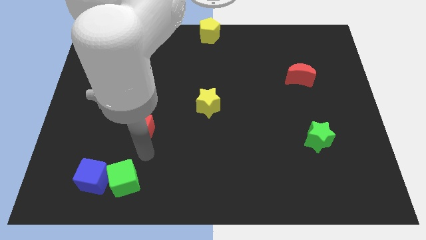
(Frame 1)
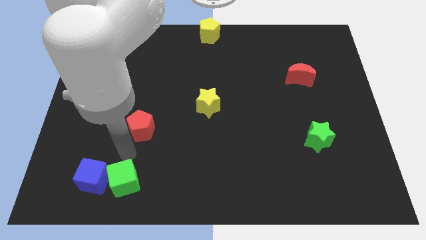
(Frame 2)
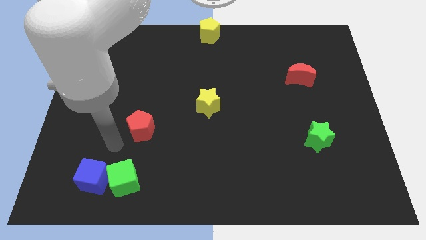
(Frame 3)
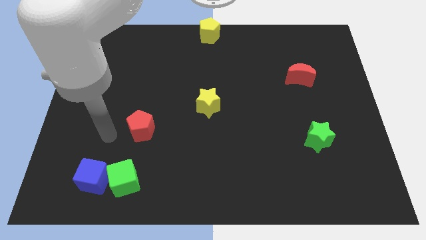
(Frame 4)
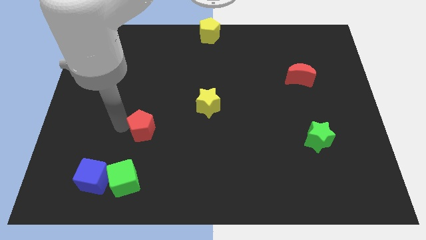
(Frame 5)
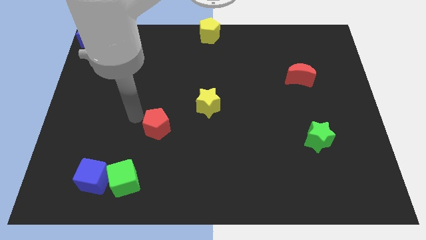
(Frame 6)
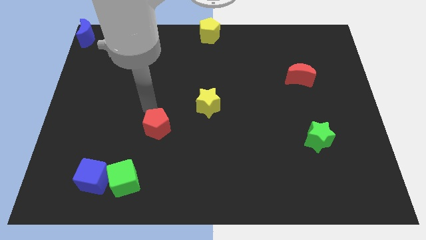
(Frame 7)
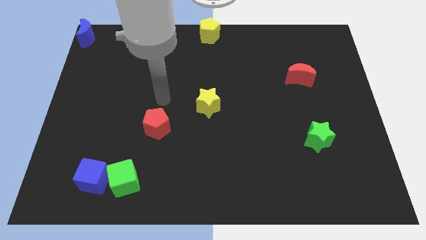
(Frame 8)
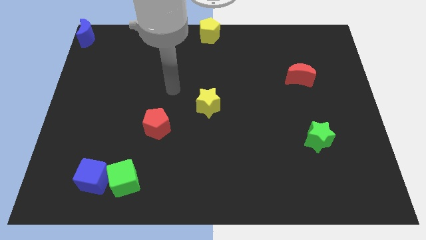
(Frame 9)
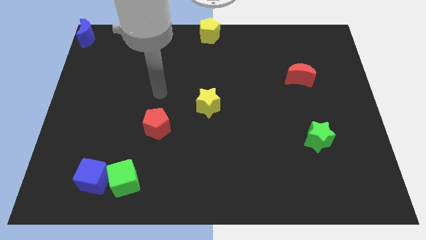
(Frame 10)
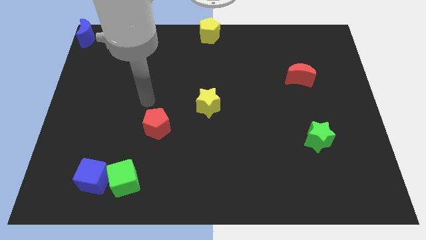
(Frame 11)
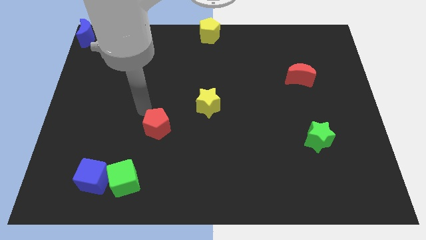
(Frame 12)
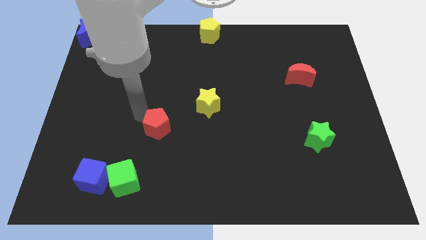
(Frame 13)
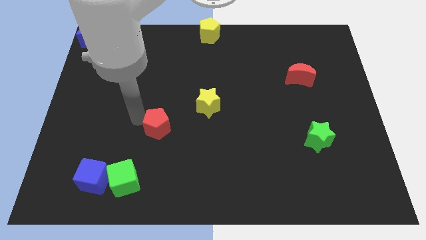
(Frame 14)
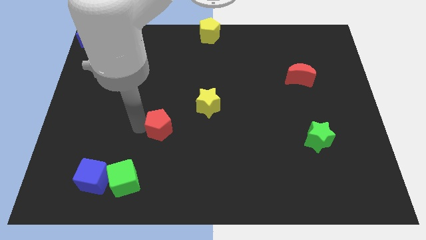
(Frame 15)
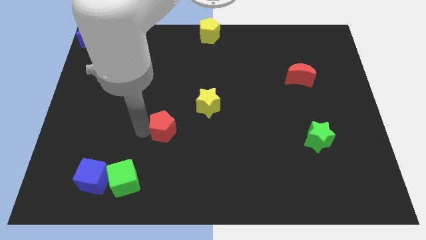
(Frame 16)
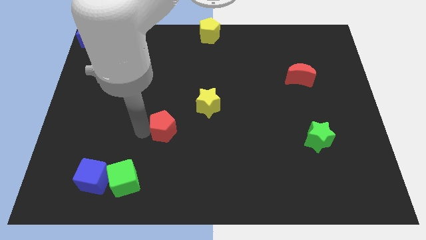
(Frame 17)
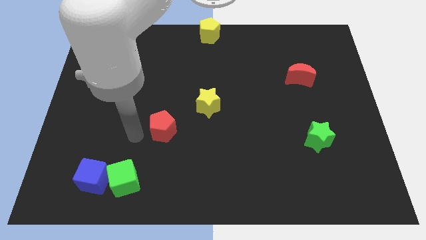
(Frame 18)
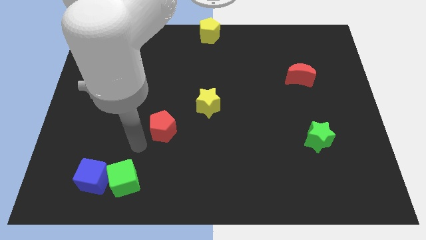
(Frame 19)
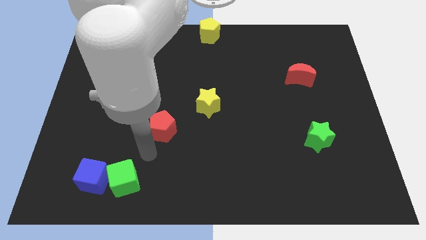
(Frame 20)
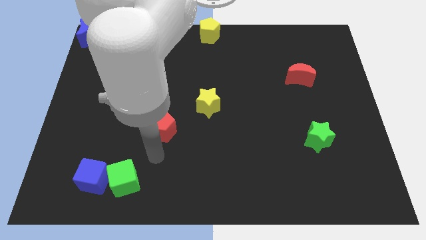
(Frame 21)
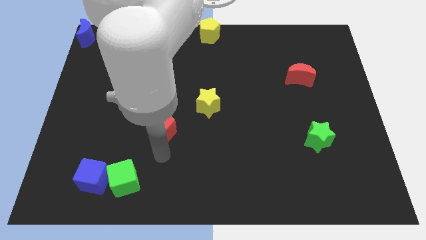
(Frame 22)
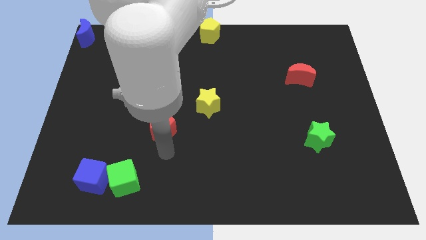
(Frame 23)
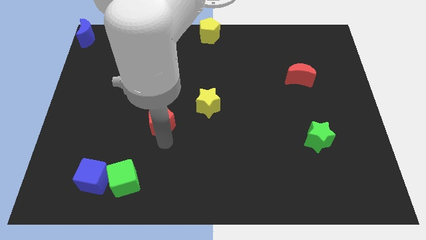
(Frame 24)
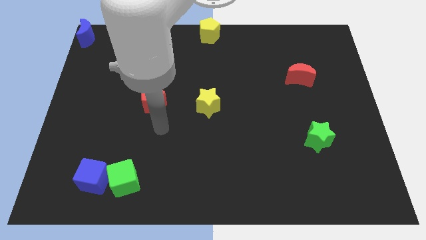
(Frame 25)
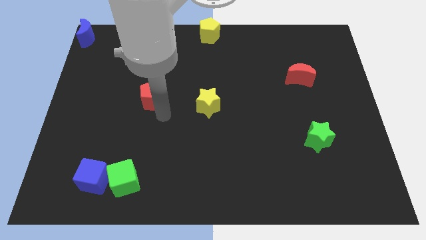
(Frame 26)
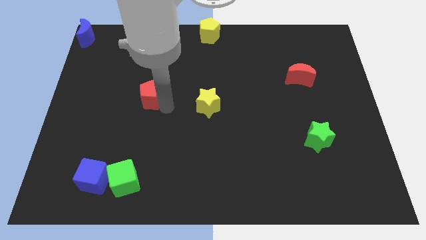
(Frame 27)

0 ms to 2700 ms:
arrange the red pentagon parallel to the yellow star

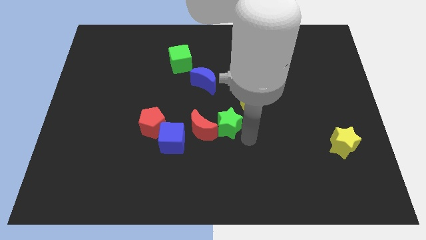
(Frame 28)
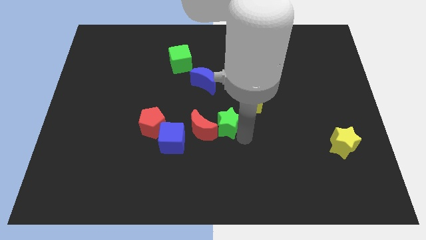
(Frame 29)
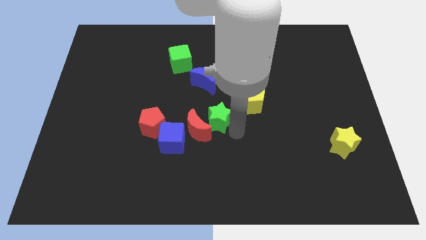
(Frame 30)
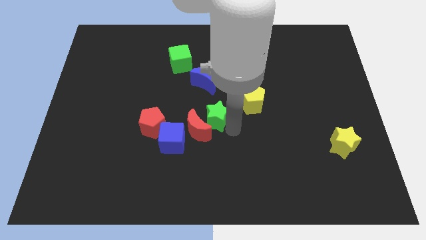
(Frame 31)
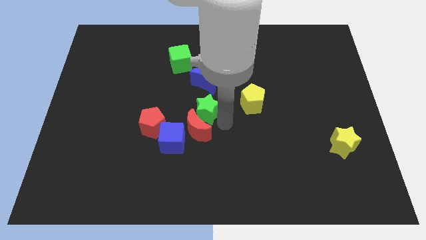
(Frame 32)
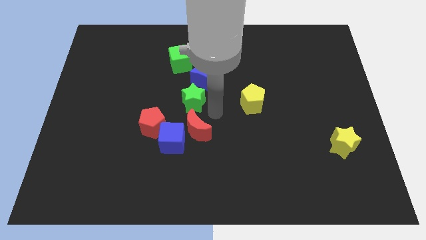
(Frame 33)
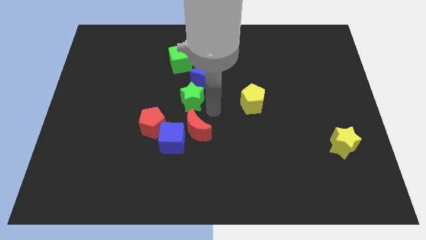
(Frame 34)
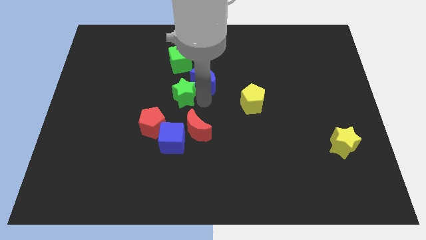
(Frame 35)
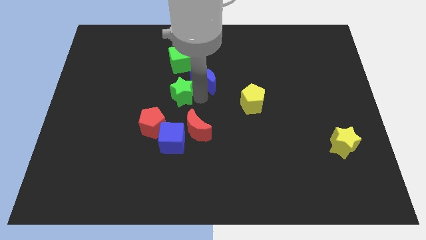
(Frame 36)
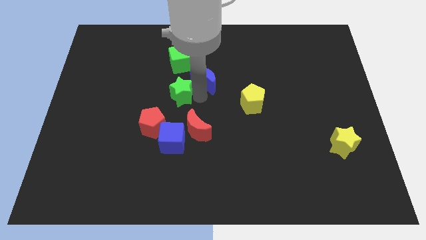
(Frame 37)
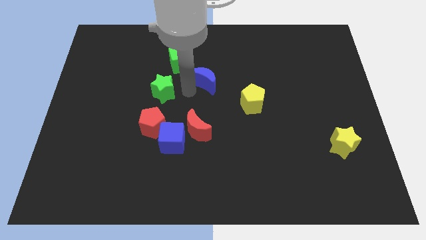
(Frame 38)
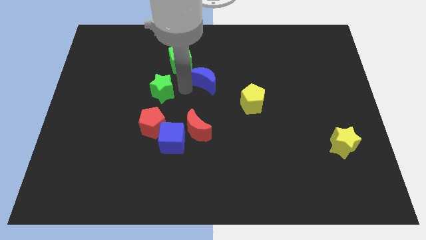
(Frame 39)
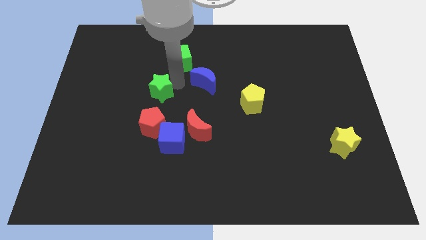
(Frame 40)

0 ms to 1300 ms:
move the green star vertically to the top side of the red pentagon

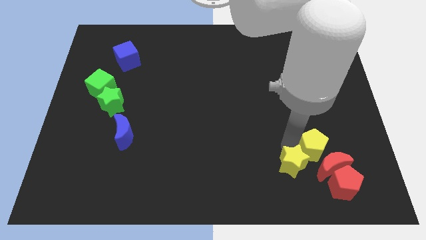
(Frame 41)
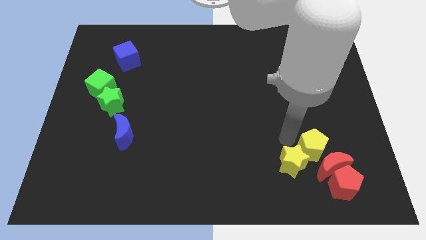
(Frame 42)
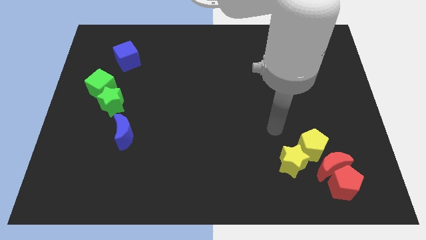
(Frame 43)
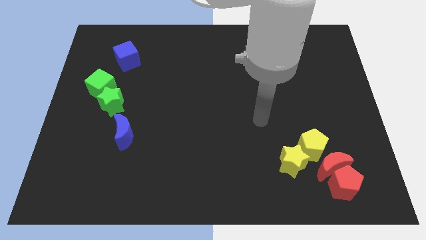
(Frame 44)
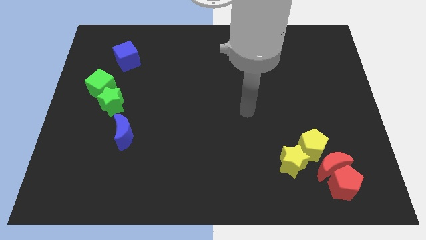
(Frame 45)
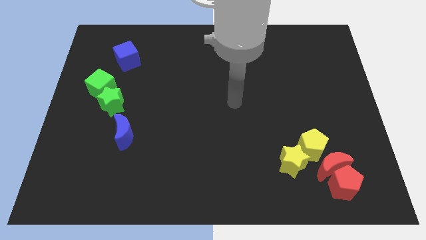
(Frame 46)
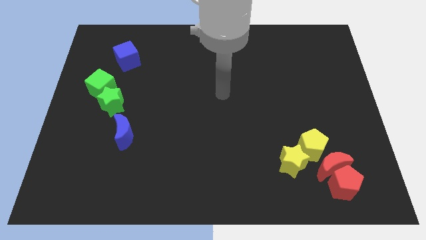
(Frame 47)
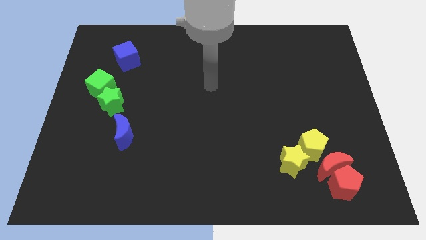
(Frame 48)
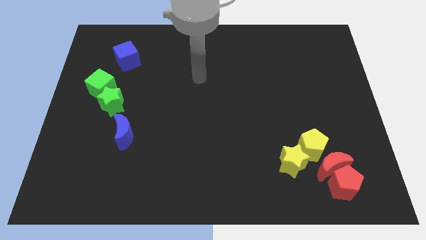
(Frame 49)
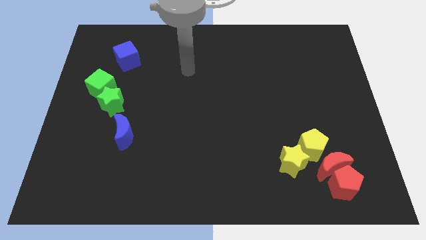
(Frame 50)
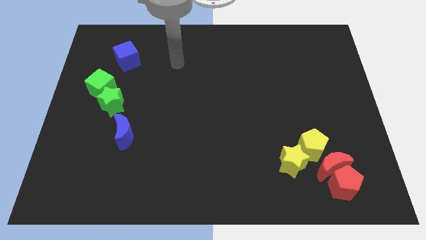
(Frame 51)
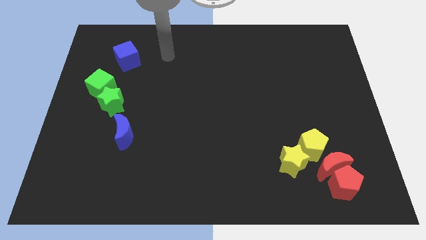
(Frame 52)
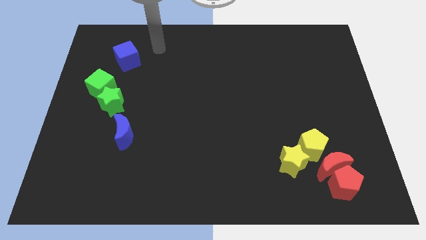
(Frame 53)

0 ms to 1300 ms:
move your arm to the top left of the board

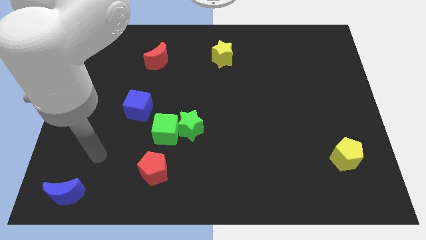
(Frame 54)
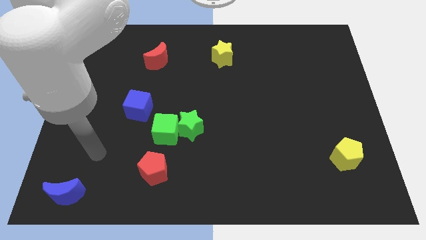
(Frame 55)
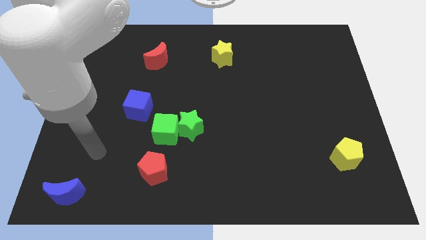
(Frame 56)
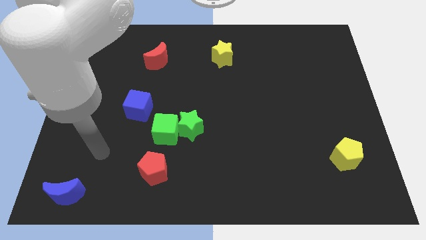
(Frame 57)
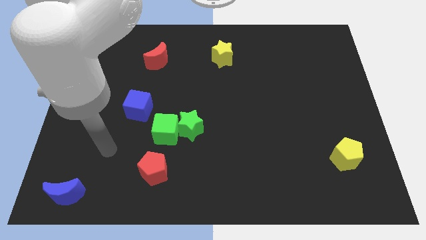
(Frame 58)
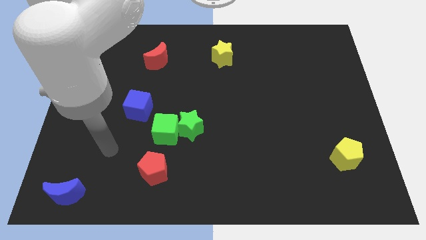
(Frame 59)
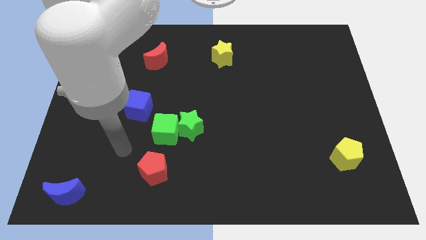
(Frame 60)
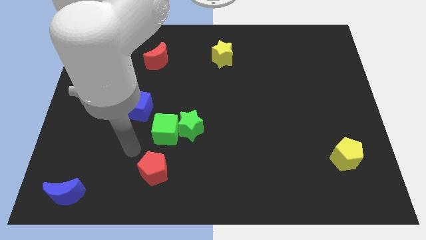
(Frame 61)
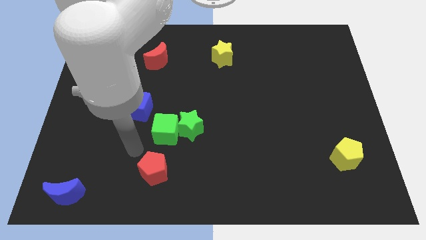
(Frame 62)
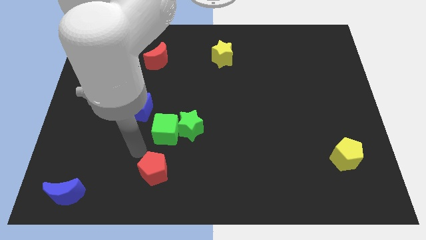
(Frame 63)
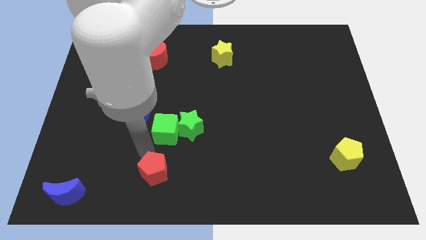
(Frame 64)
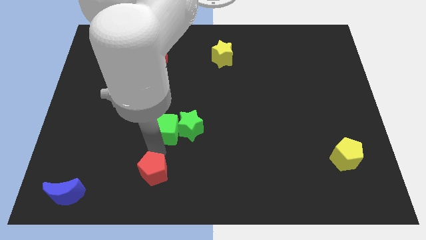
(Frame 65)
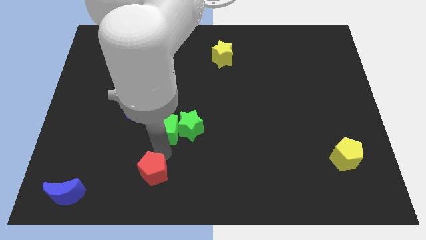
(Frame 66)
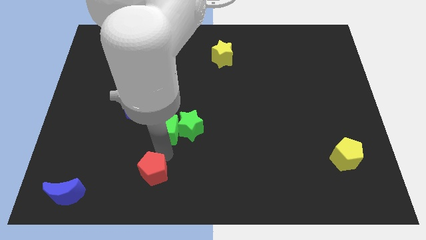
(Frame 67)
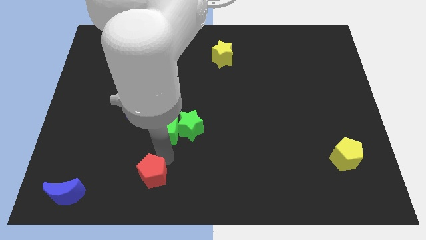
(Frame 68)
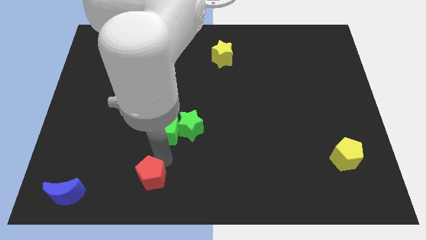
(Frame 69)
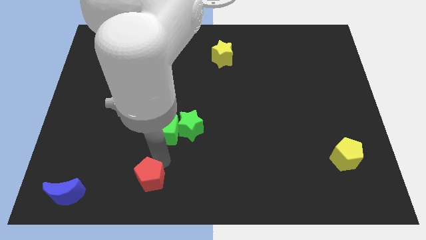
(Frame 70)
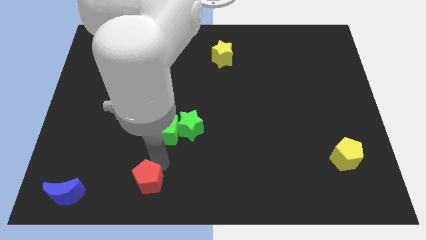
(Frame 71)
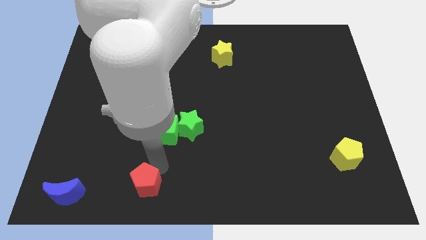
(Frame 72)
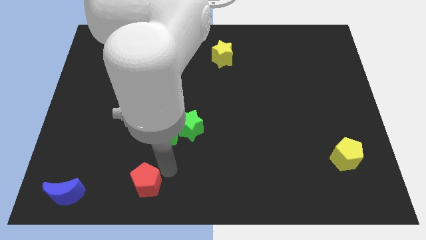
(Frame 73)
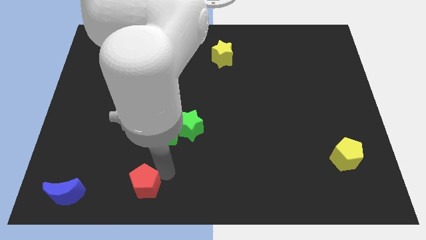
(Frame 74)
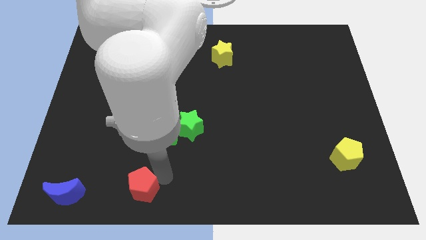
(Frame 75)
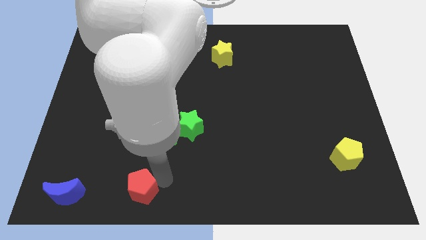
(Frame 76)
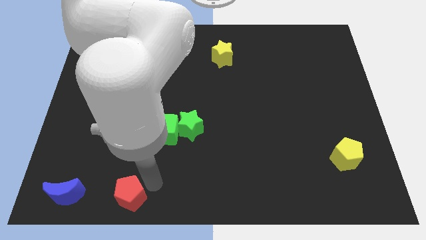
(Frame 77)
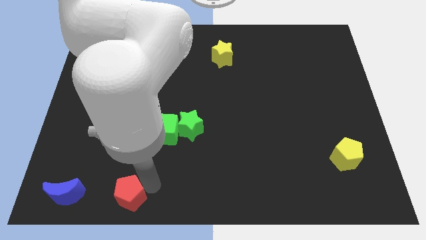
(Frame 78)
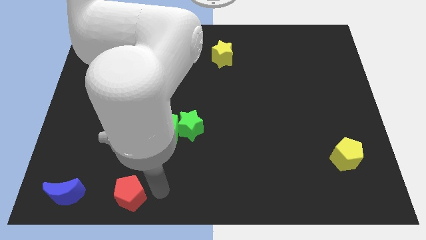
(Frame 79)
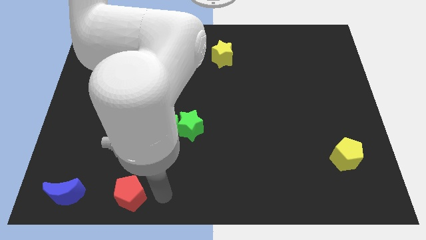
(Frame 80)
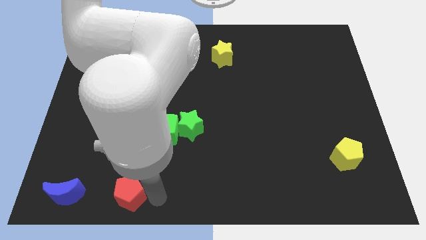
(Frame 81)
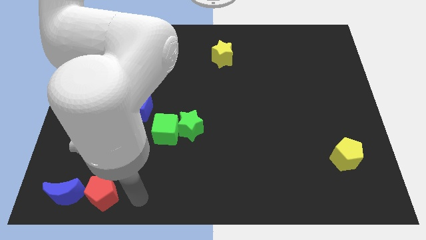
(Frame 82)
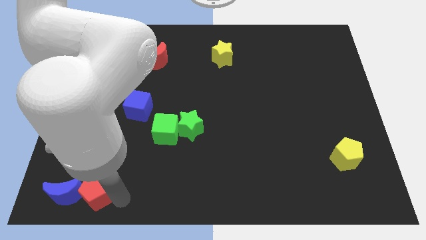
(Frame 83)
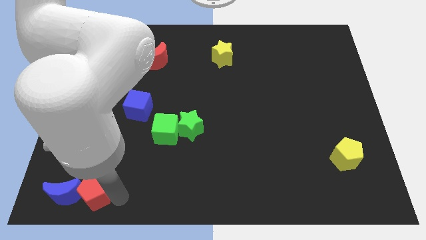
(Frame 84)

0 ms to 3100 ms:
move the red pentagon to the right into blue moon

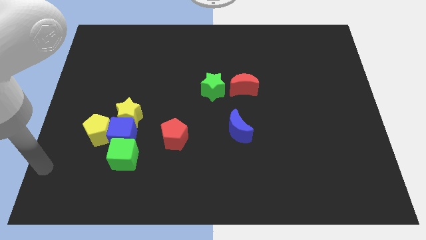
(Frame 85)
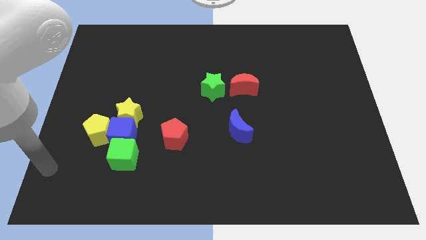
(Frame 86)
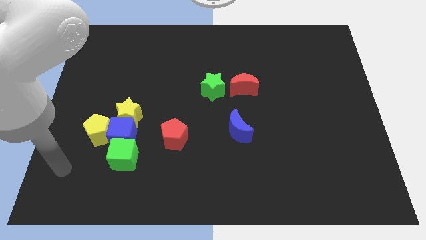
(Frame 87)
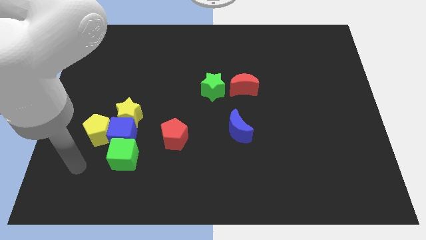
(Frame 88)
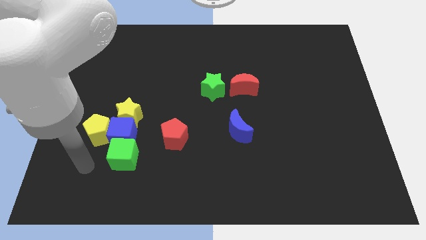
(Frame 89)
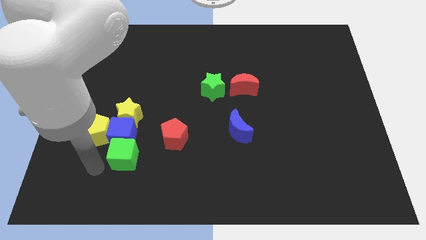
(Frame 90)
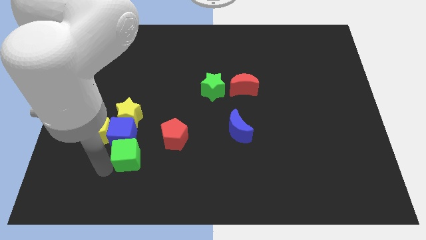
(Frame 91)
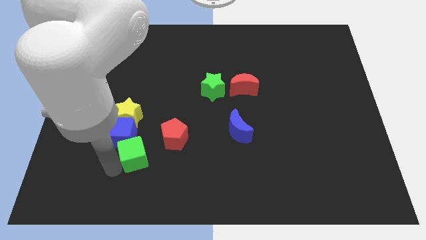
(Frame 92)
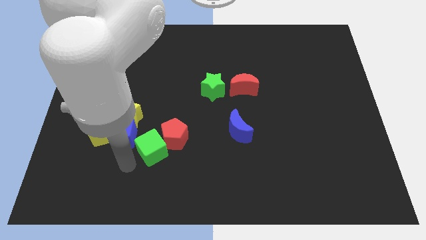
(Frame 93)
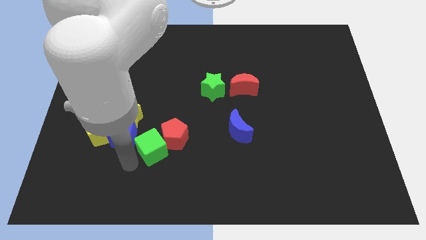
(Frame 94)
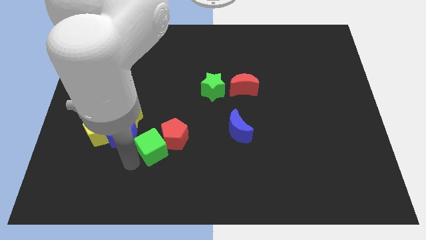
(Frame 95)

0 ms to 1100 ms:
separate the green cube from the blue cube
